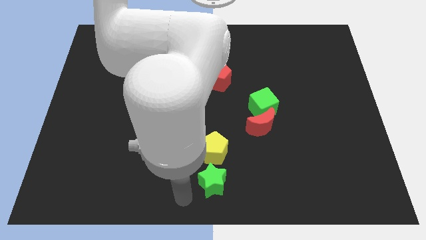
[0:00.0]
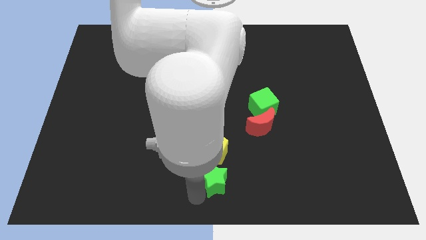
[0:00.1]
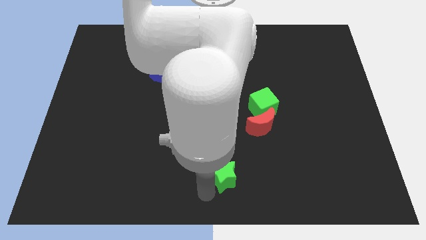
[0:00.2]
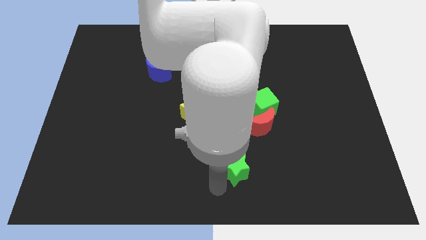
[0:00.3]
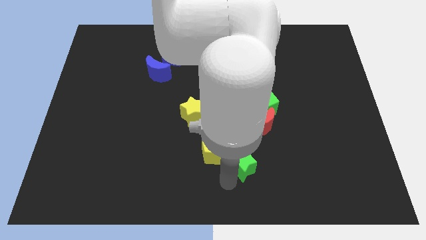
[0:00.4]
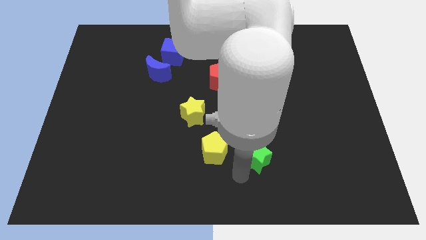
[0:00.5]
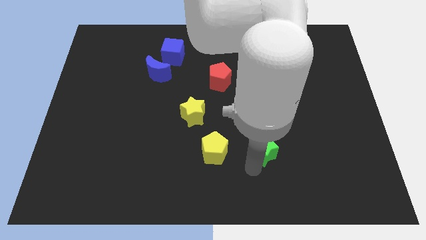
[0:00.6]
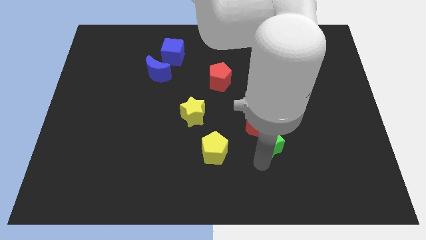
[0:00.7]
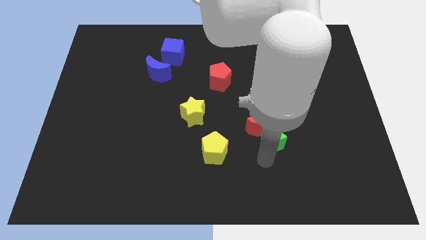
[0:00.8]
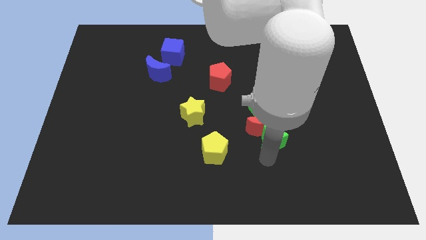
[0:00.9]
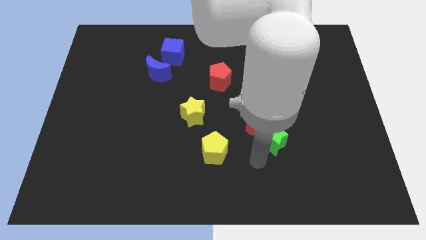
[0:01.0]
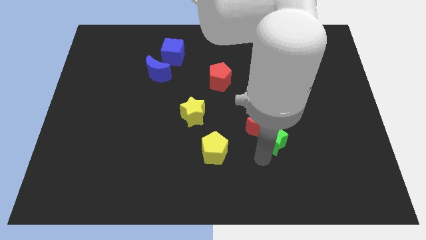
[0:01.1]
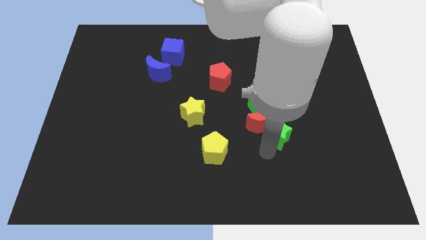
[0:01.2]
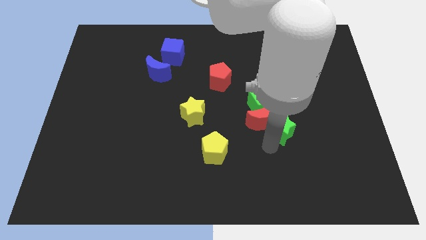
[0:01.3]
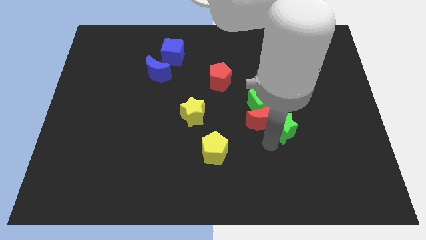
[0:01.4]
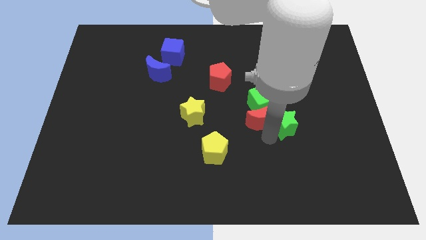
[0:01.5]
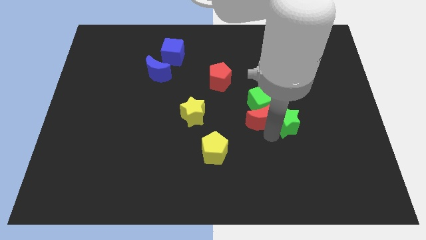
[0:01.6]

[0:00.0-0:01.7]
push the green star into red moon

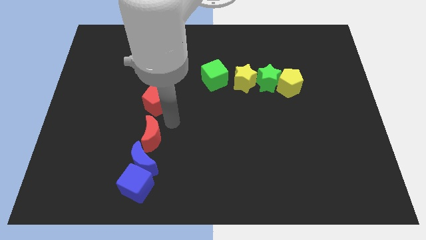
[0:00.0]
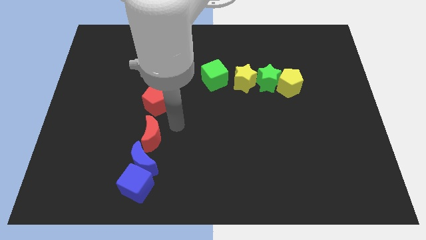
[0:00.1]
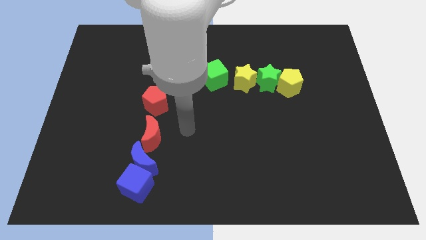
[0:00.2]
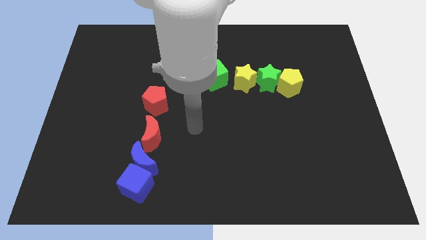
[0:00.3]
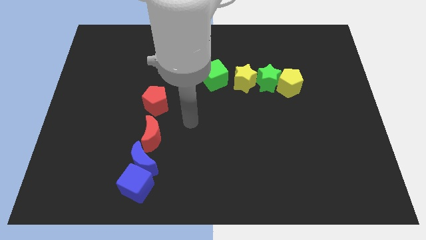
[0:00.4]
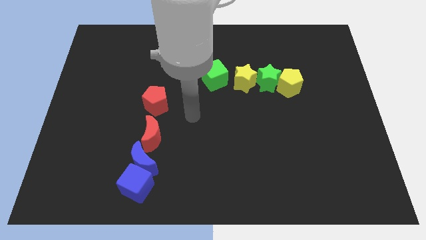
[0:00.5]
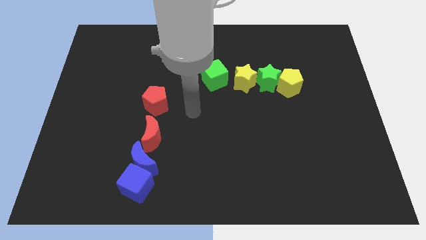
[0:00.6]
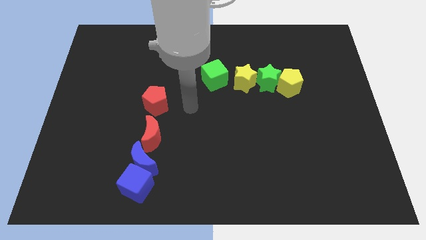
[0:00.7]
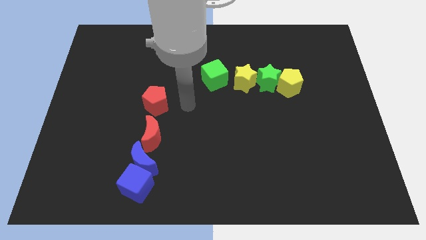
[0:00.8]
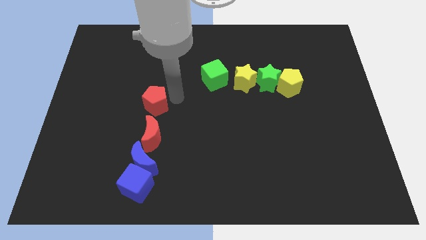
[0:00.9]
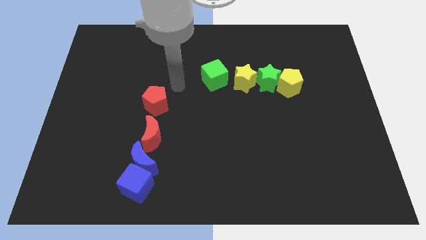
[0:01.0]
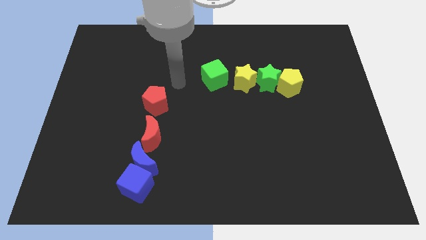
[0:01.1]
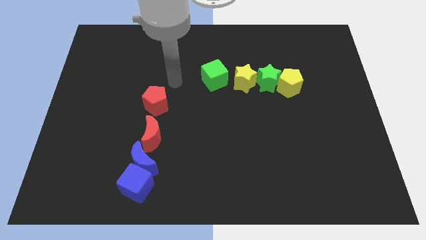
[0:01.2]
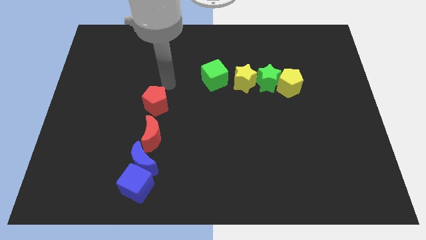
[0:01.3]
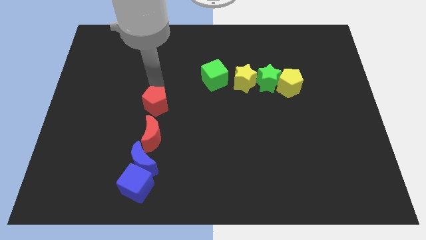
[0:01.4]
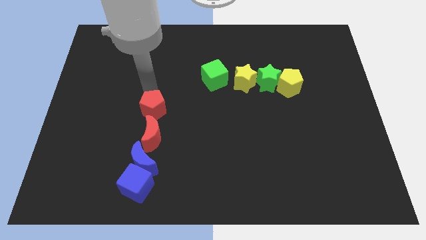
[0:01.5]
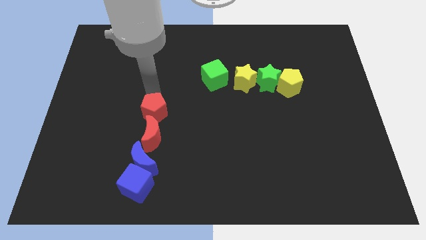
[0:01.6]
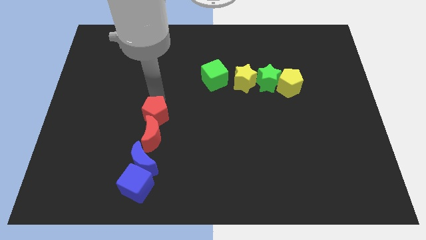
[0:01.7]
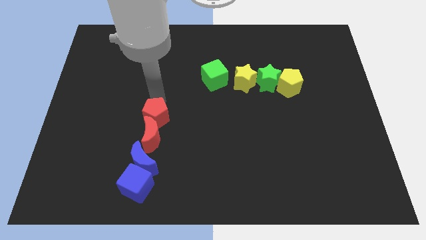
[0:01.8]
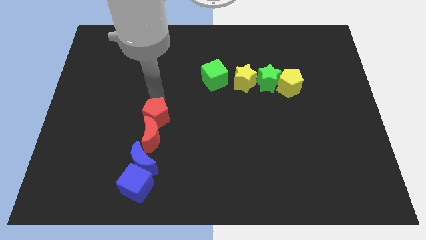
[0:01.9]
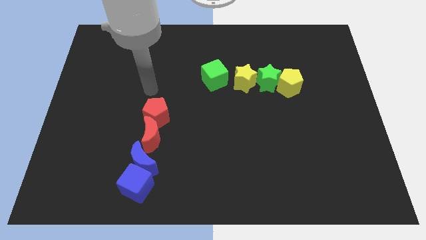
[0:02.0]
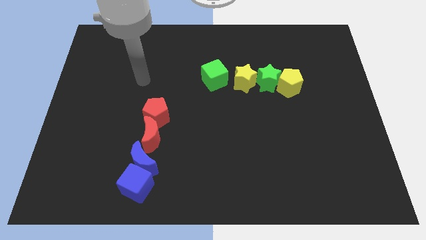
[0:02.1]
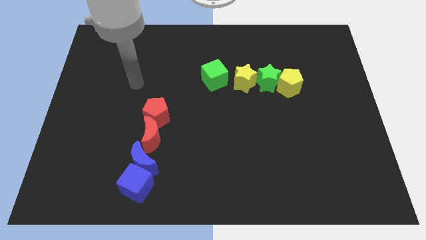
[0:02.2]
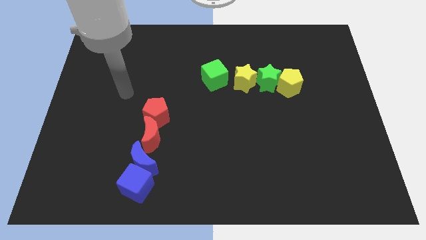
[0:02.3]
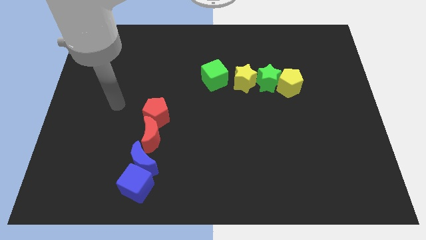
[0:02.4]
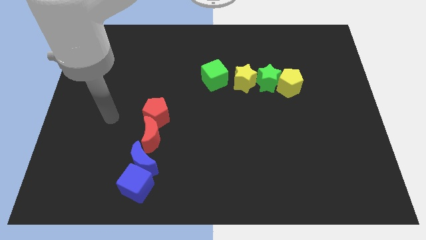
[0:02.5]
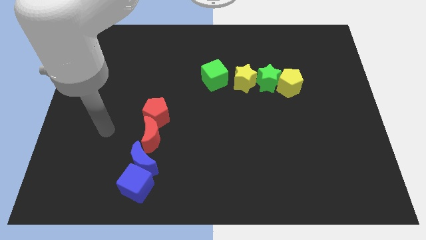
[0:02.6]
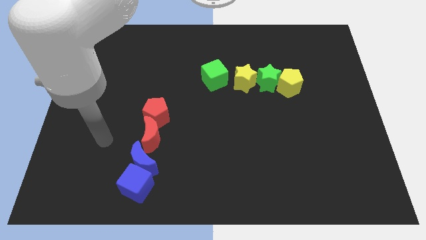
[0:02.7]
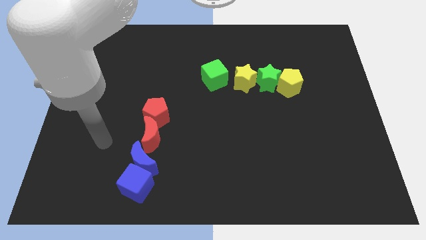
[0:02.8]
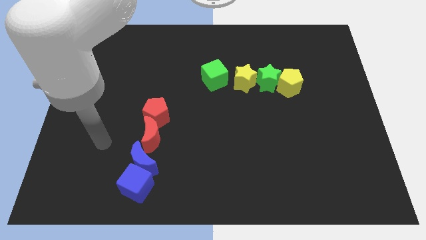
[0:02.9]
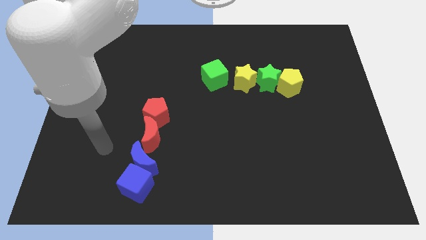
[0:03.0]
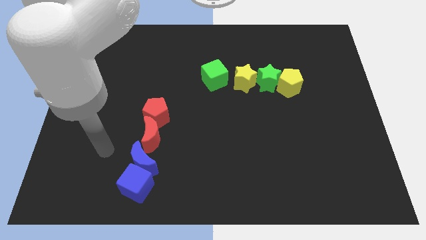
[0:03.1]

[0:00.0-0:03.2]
go away from the red pentagon

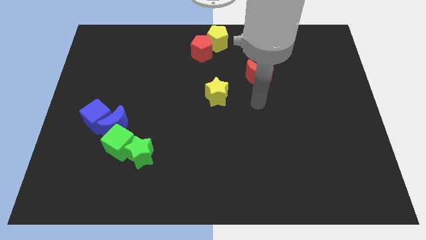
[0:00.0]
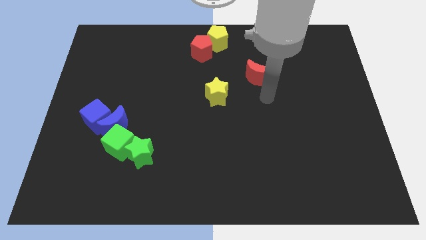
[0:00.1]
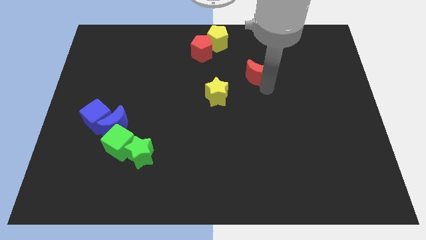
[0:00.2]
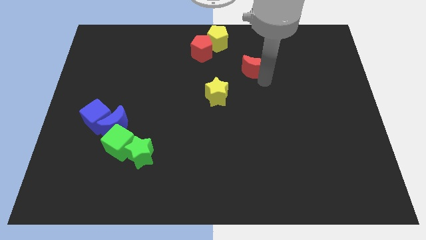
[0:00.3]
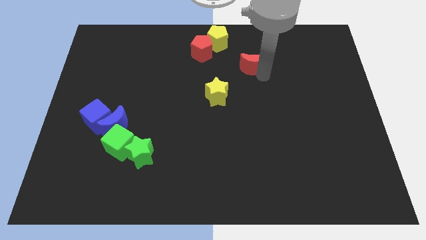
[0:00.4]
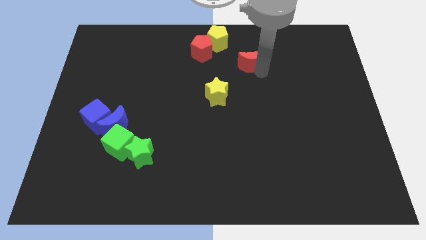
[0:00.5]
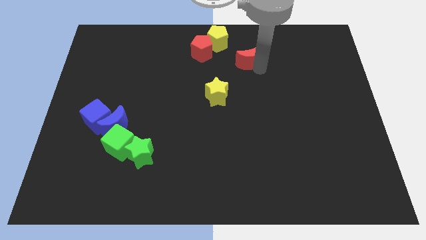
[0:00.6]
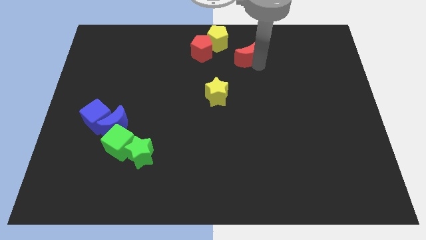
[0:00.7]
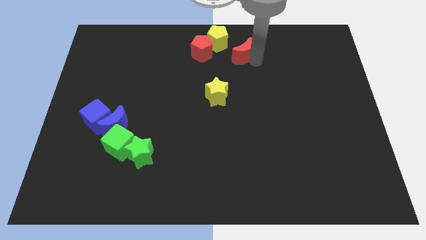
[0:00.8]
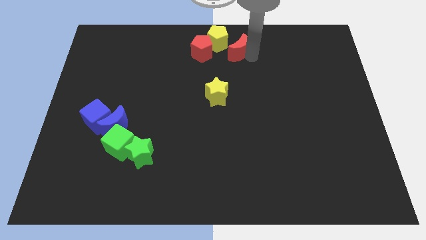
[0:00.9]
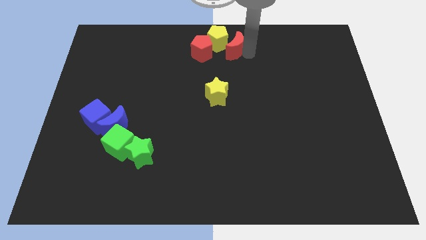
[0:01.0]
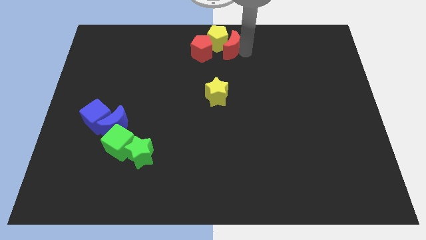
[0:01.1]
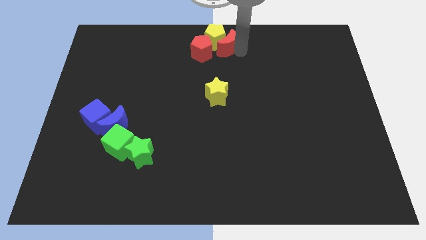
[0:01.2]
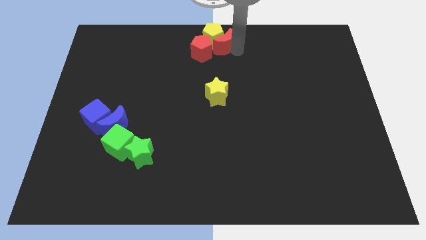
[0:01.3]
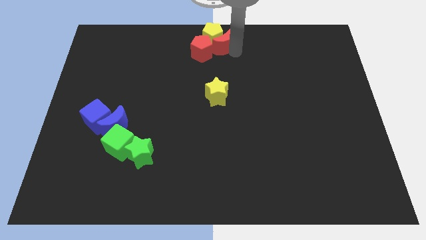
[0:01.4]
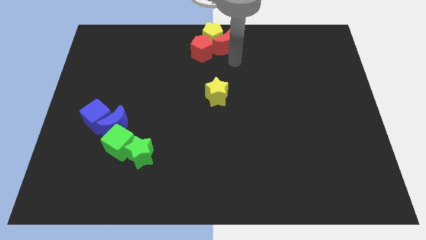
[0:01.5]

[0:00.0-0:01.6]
place the red moon into the yellow pentagon

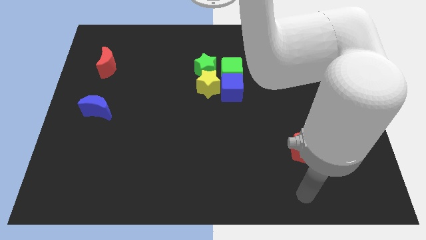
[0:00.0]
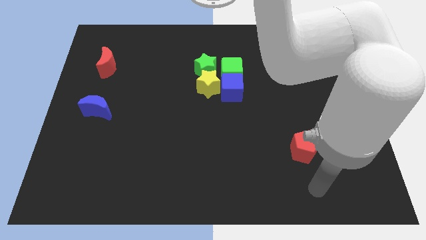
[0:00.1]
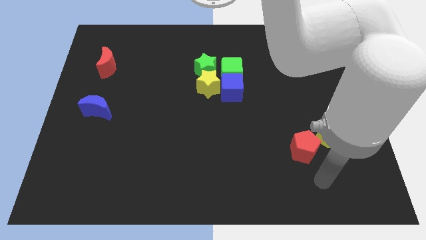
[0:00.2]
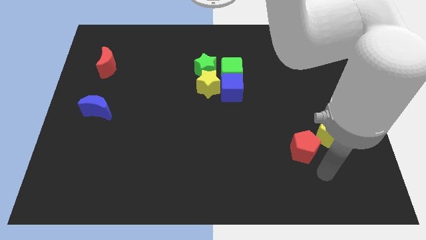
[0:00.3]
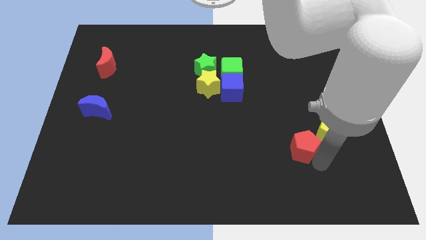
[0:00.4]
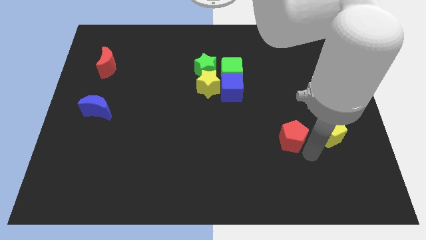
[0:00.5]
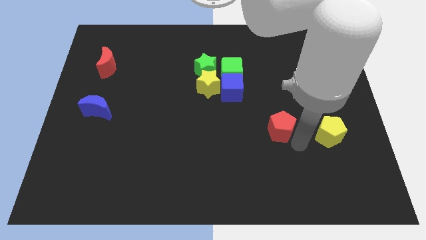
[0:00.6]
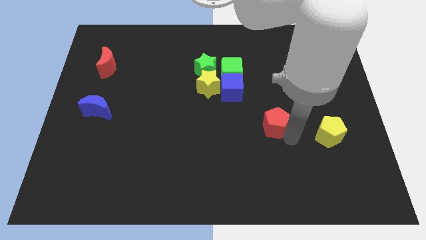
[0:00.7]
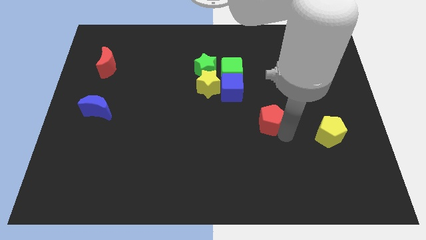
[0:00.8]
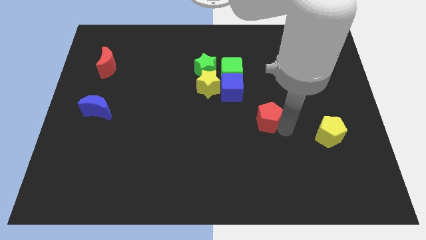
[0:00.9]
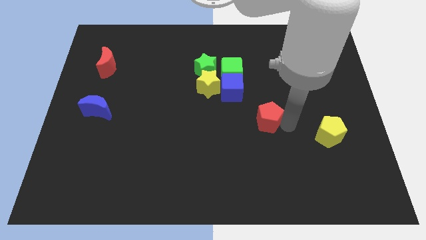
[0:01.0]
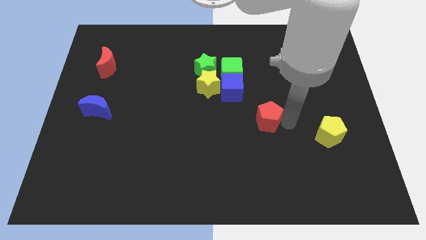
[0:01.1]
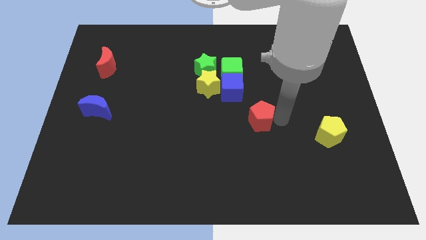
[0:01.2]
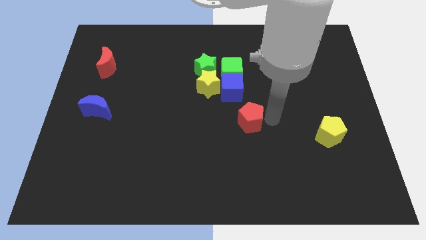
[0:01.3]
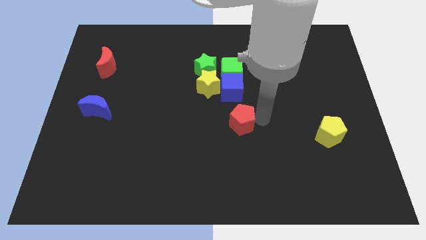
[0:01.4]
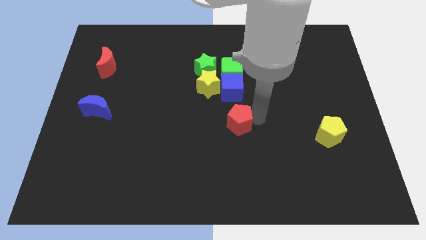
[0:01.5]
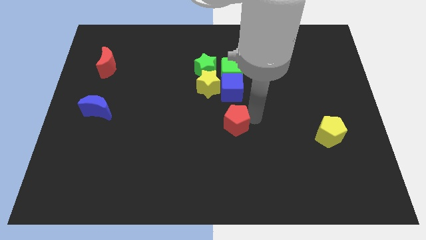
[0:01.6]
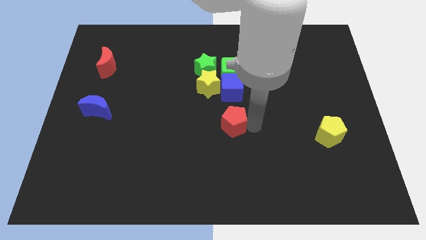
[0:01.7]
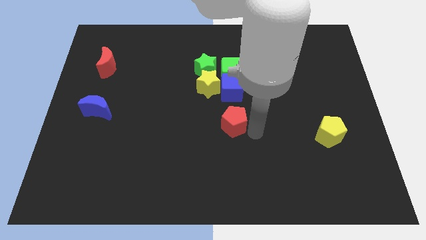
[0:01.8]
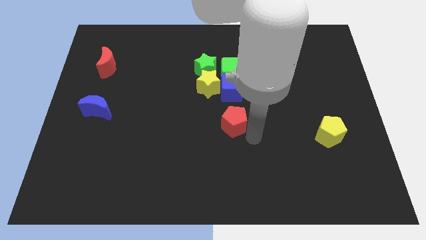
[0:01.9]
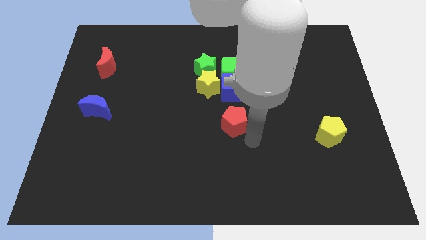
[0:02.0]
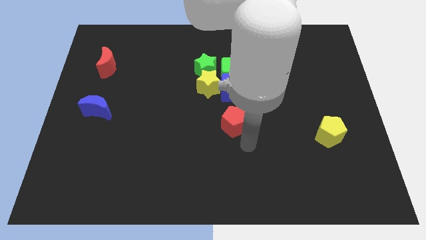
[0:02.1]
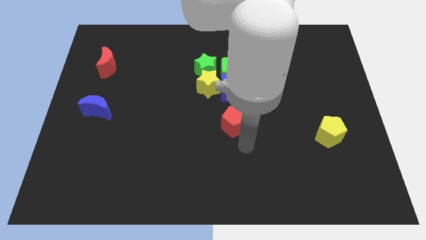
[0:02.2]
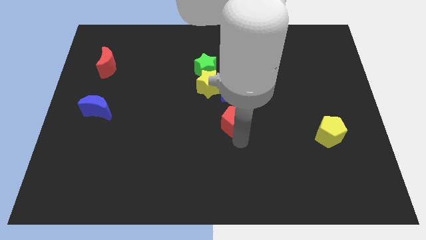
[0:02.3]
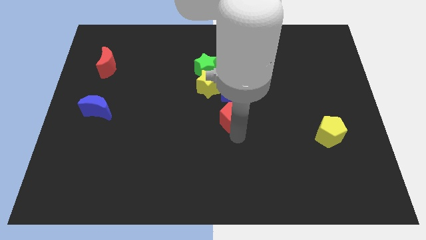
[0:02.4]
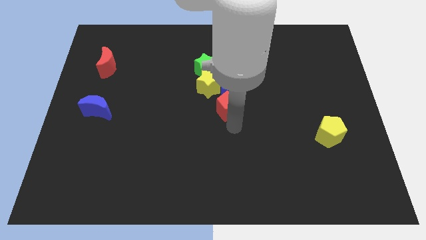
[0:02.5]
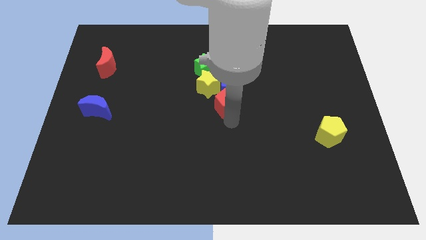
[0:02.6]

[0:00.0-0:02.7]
separate red pentagon from yellow pentagon
